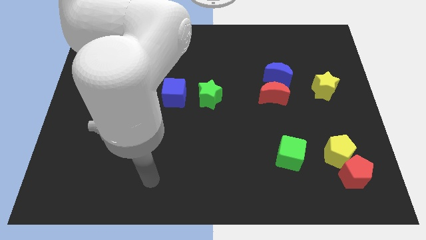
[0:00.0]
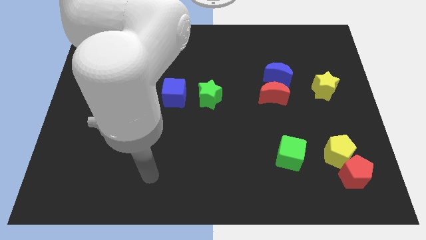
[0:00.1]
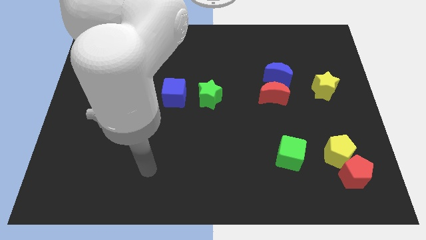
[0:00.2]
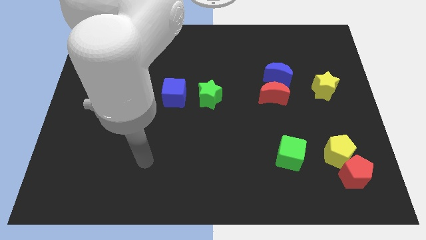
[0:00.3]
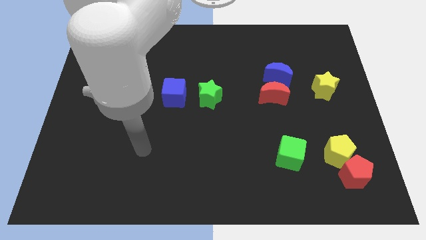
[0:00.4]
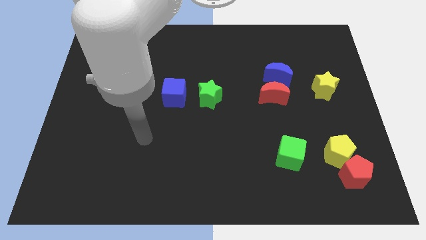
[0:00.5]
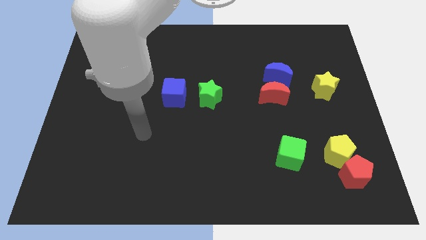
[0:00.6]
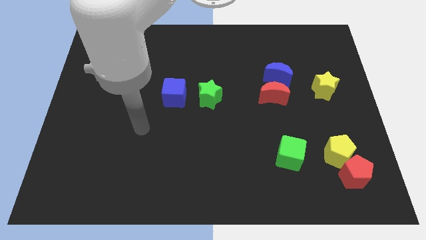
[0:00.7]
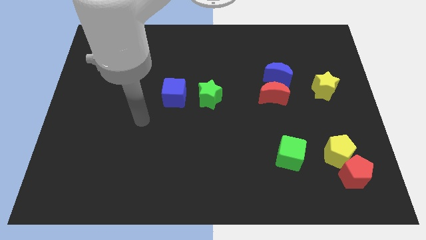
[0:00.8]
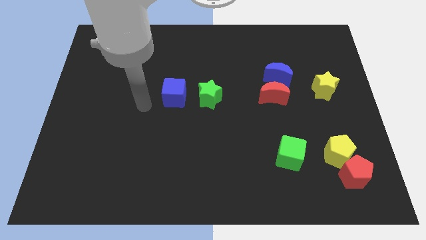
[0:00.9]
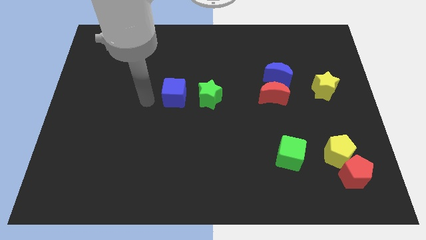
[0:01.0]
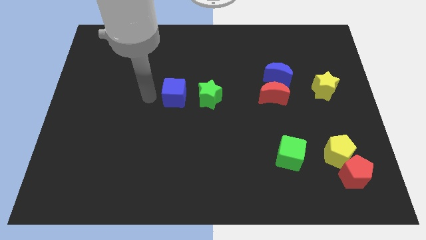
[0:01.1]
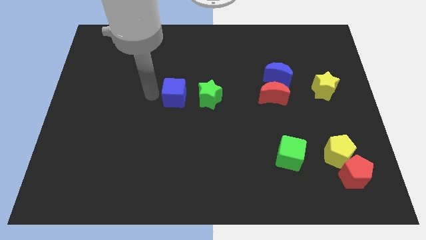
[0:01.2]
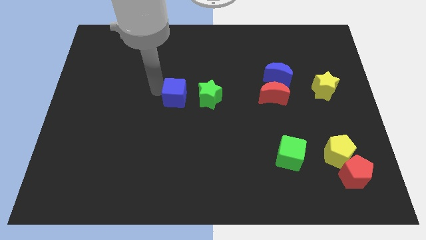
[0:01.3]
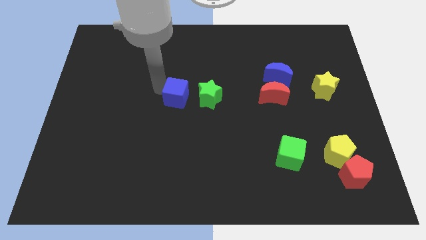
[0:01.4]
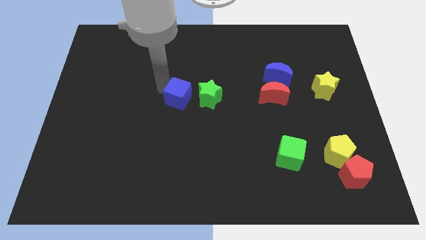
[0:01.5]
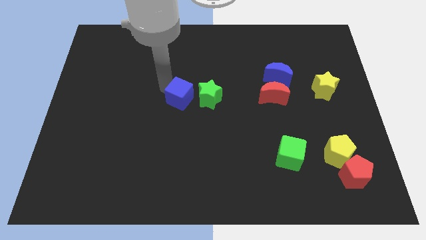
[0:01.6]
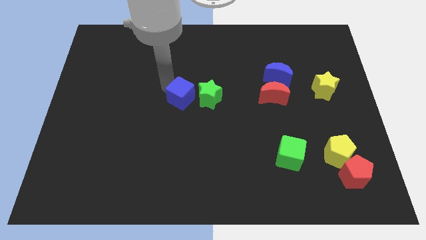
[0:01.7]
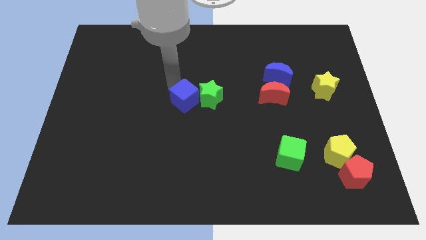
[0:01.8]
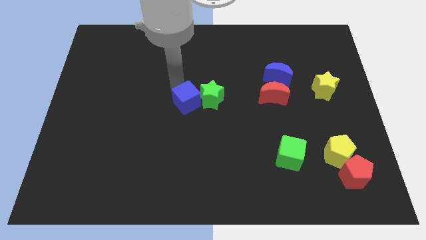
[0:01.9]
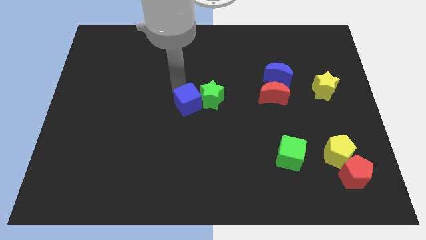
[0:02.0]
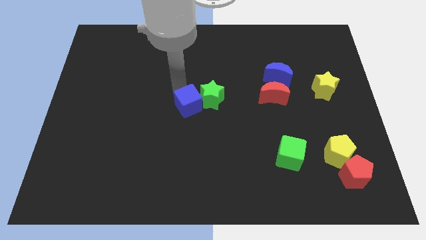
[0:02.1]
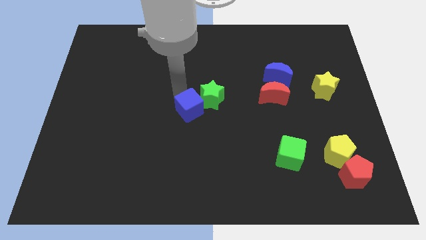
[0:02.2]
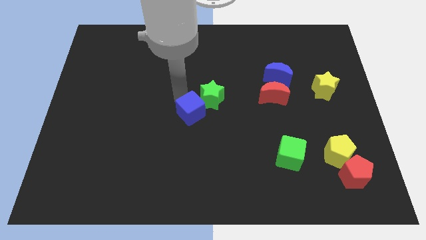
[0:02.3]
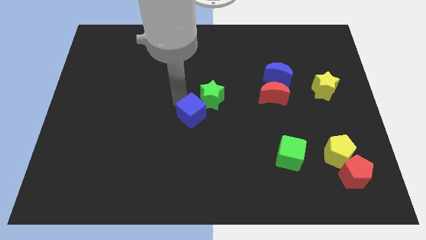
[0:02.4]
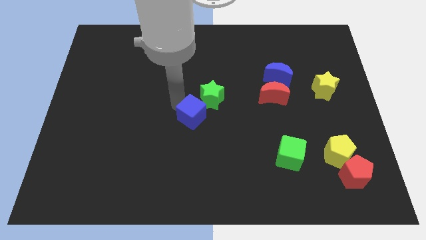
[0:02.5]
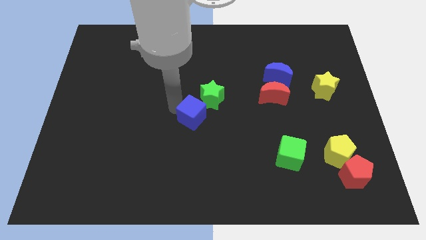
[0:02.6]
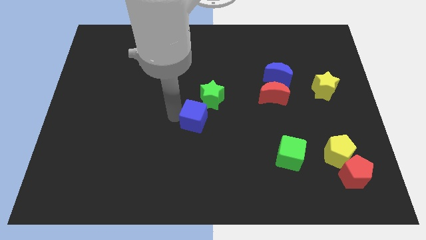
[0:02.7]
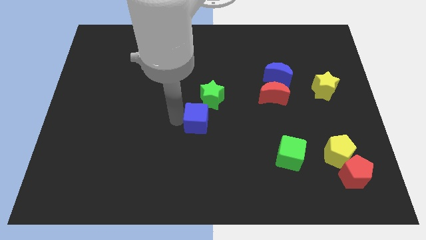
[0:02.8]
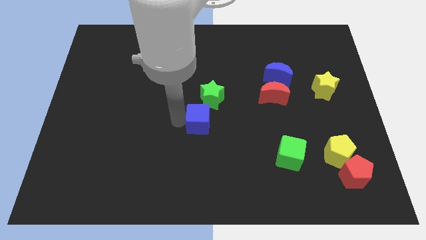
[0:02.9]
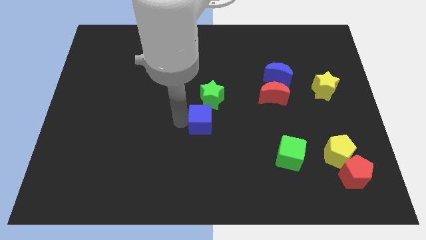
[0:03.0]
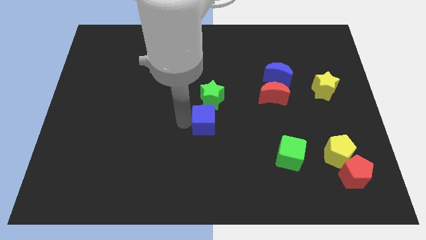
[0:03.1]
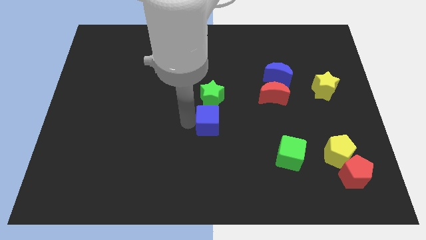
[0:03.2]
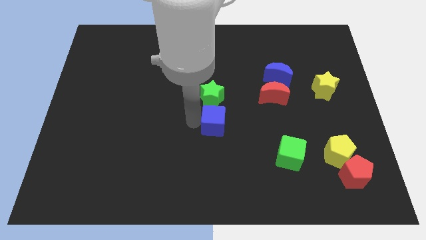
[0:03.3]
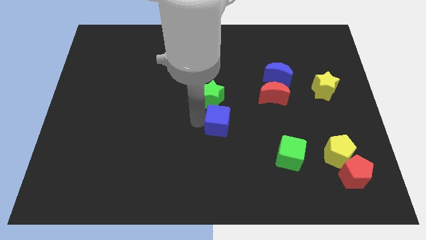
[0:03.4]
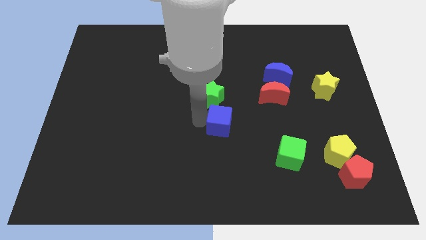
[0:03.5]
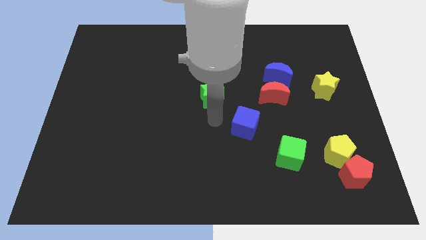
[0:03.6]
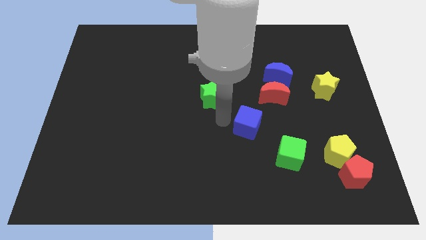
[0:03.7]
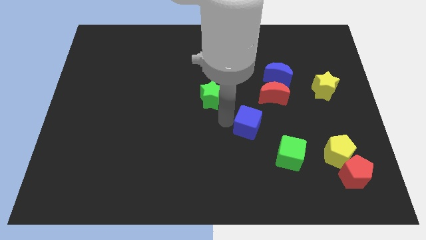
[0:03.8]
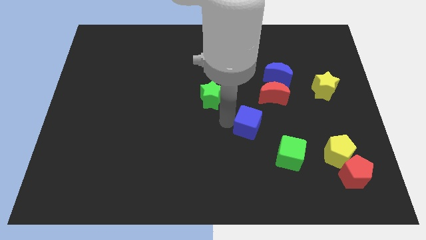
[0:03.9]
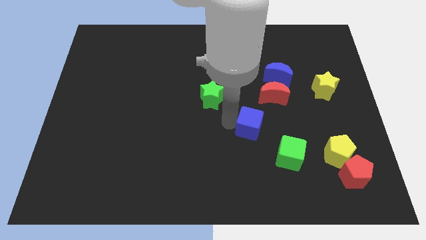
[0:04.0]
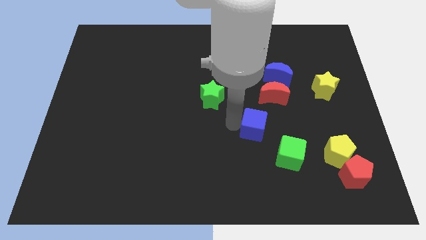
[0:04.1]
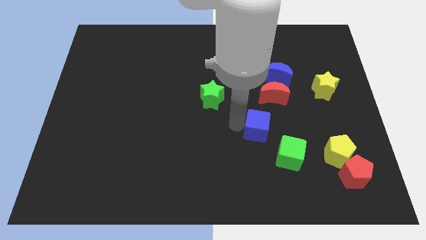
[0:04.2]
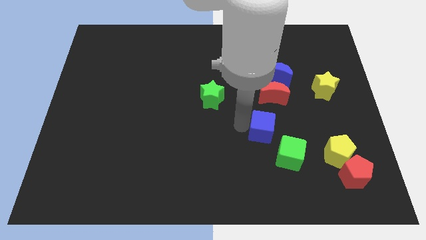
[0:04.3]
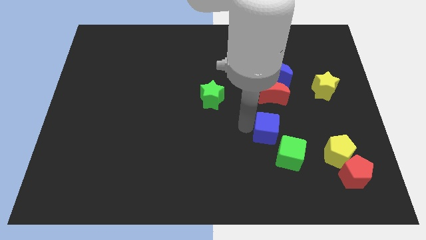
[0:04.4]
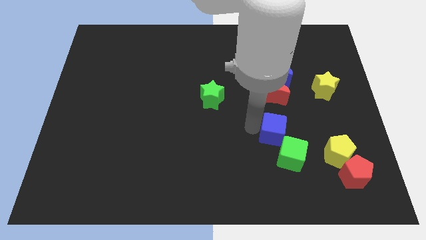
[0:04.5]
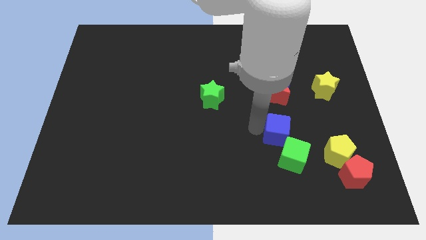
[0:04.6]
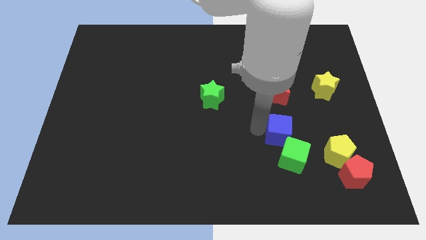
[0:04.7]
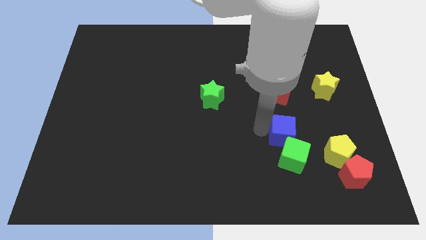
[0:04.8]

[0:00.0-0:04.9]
push the blue cube to the green cube

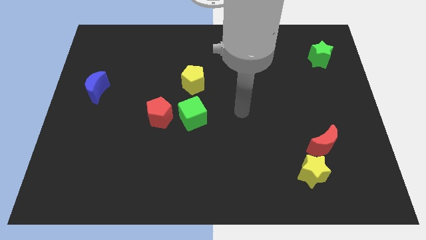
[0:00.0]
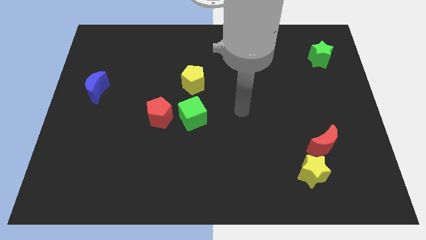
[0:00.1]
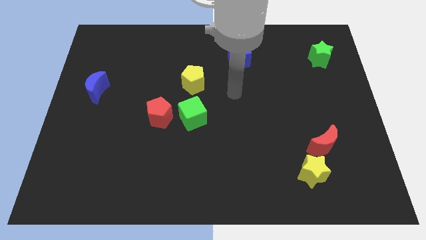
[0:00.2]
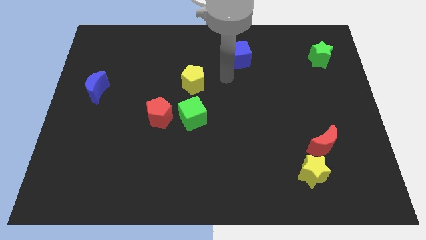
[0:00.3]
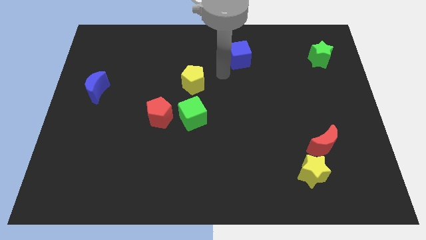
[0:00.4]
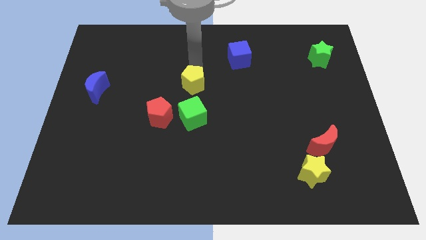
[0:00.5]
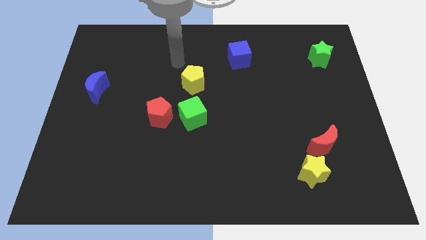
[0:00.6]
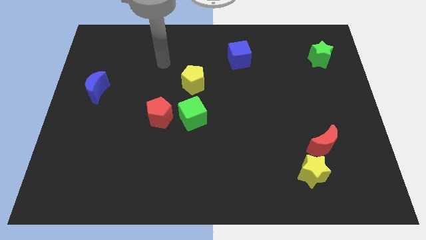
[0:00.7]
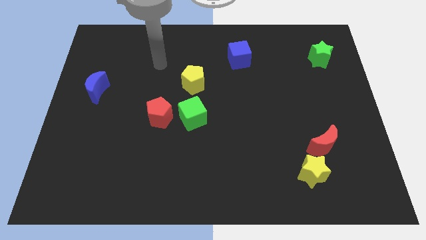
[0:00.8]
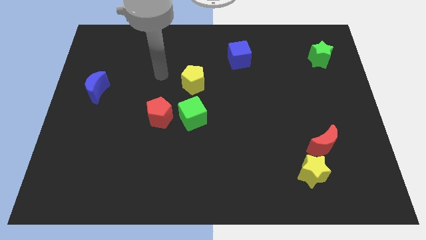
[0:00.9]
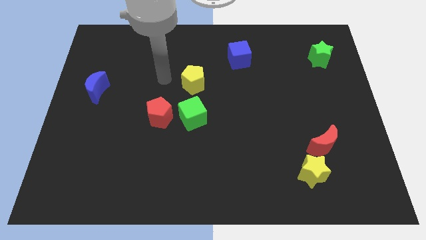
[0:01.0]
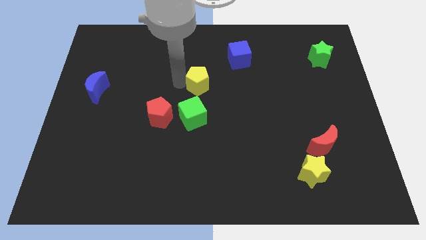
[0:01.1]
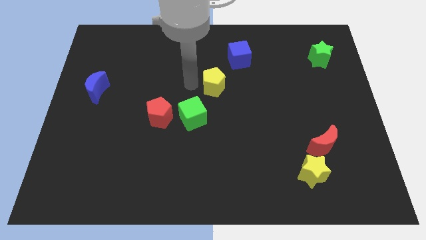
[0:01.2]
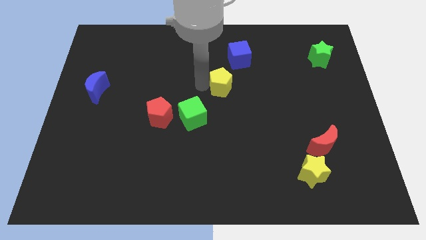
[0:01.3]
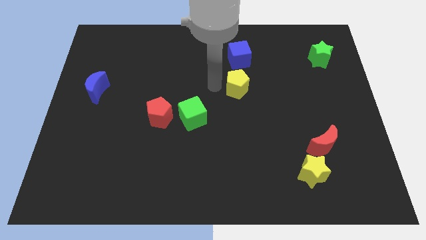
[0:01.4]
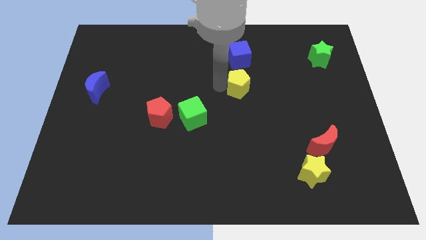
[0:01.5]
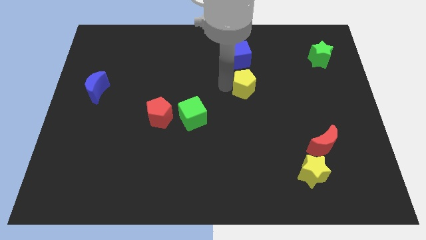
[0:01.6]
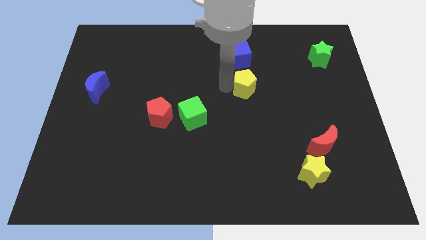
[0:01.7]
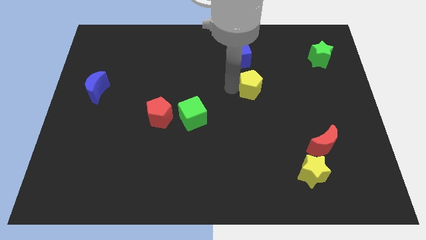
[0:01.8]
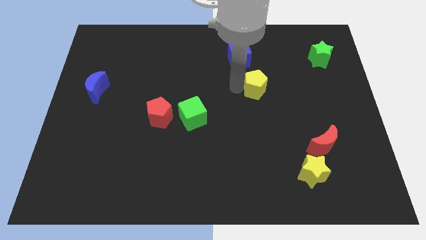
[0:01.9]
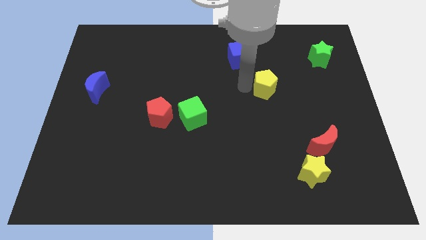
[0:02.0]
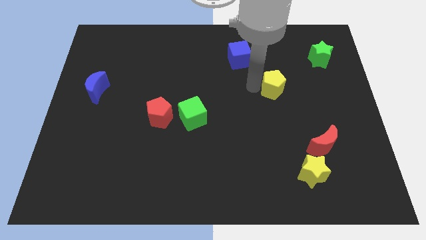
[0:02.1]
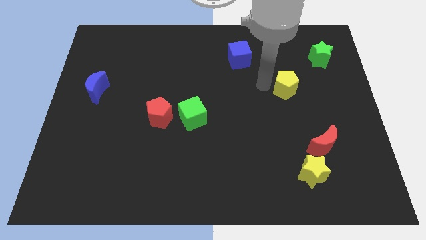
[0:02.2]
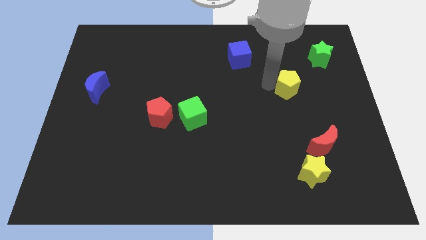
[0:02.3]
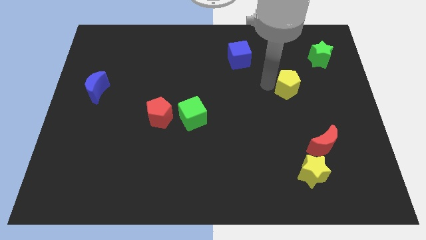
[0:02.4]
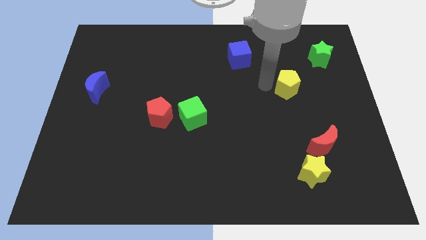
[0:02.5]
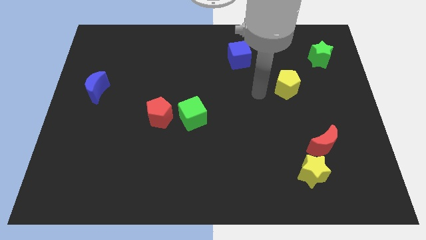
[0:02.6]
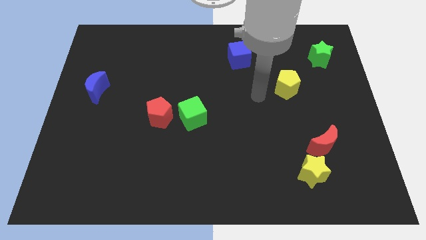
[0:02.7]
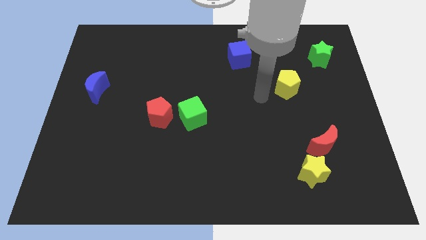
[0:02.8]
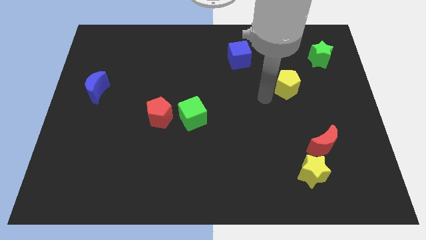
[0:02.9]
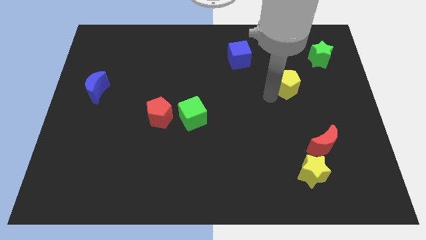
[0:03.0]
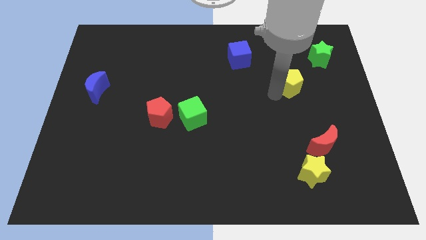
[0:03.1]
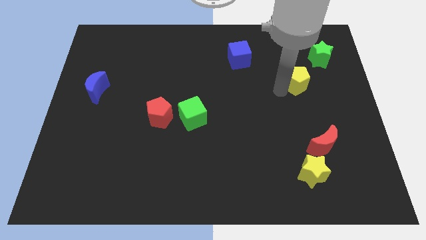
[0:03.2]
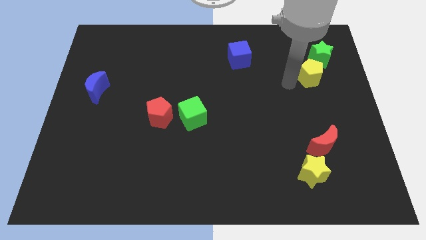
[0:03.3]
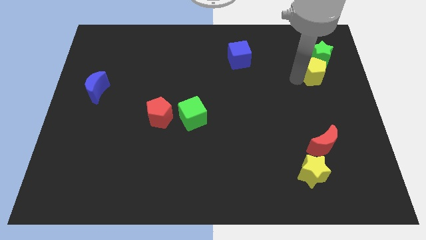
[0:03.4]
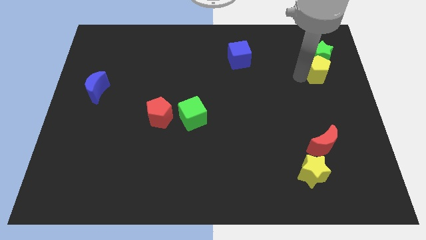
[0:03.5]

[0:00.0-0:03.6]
push the yellow pentagon close to the green star
